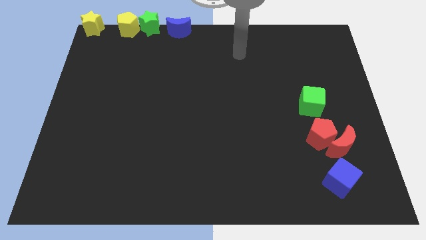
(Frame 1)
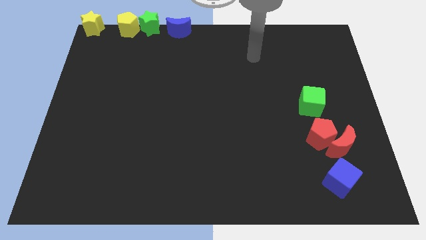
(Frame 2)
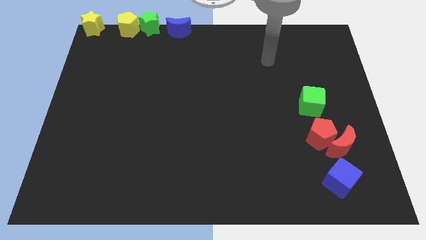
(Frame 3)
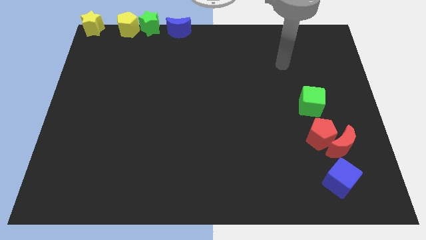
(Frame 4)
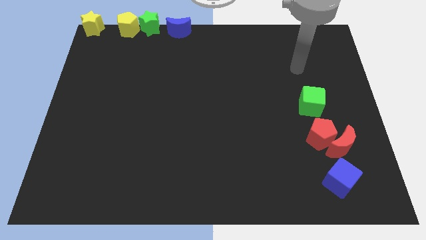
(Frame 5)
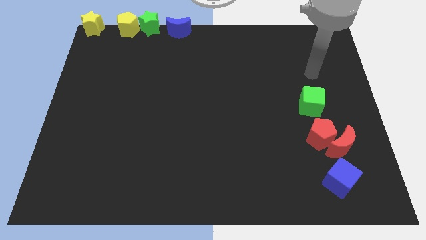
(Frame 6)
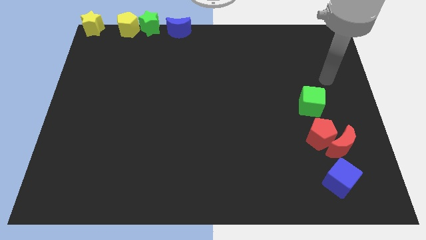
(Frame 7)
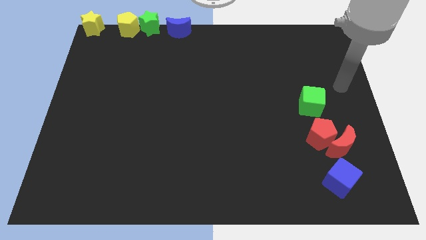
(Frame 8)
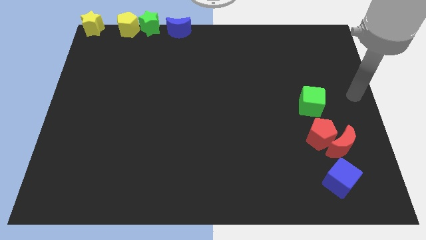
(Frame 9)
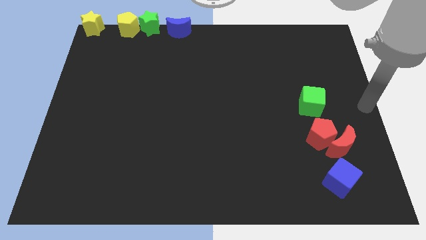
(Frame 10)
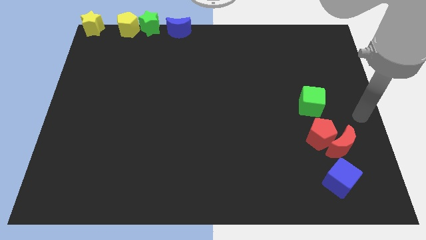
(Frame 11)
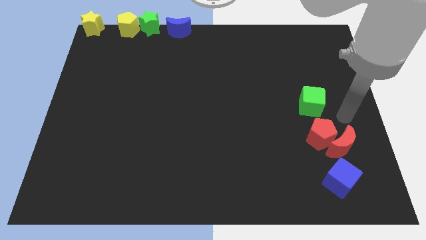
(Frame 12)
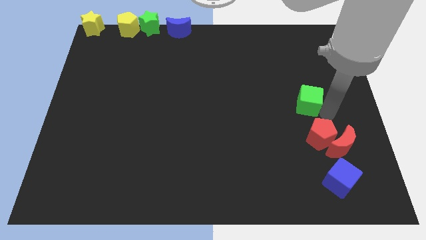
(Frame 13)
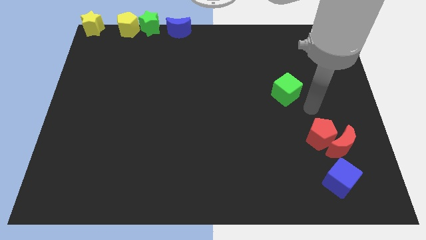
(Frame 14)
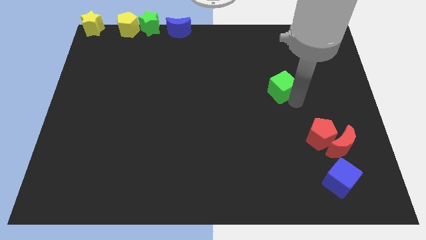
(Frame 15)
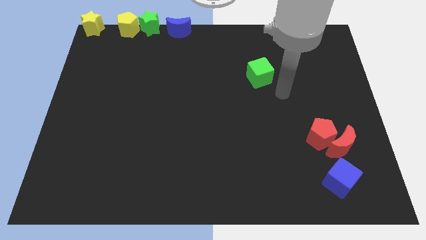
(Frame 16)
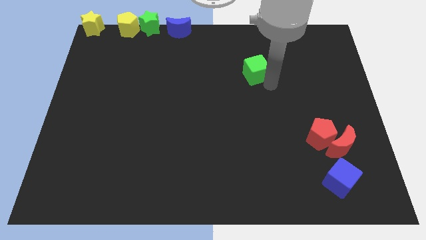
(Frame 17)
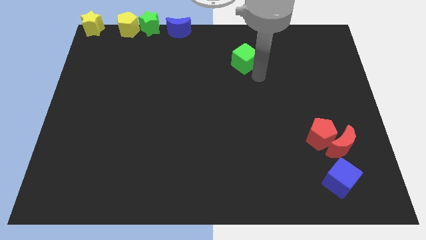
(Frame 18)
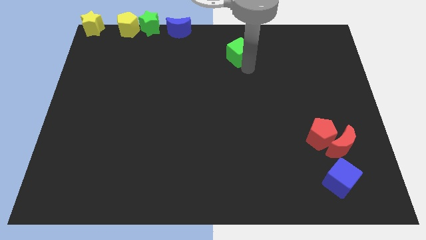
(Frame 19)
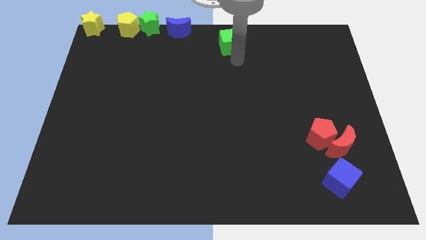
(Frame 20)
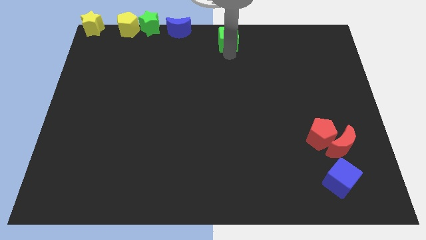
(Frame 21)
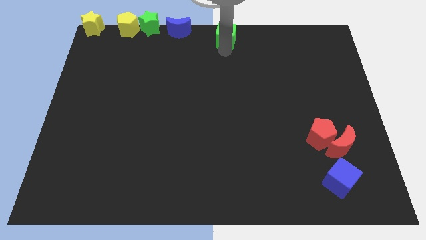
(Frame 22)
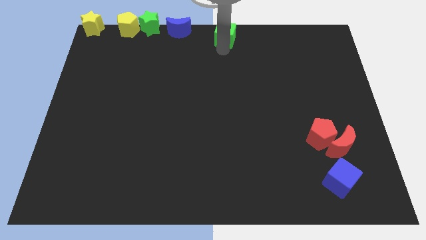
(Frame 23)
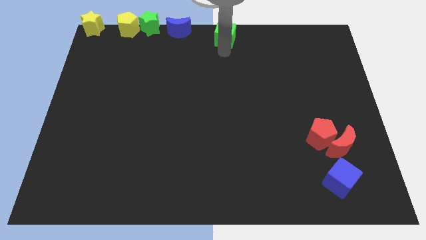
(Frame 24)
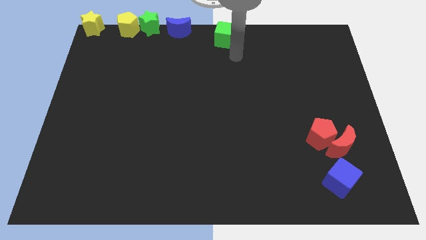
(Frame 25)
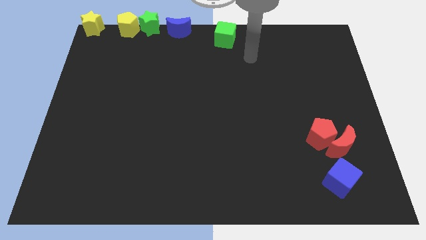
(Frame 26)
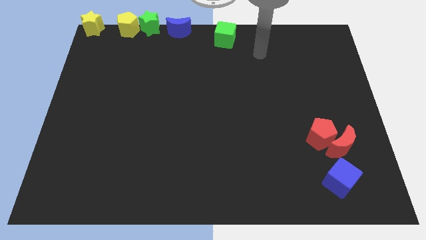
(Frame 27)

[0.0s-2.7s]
move the green cube to the top center of the board

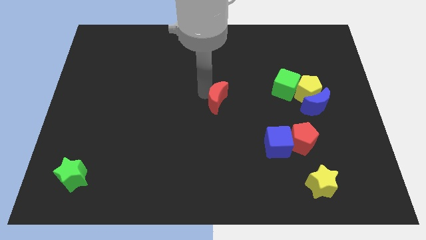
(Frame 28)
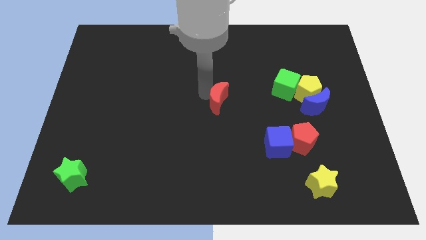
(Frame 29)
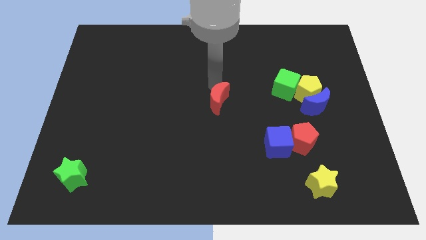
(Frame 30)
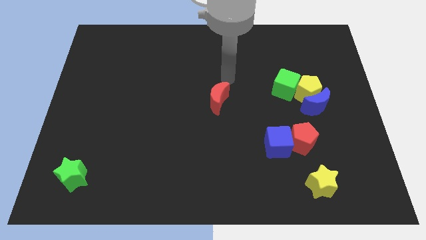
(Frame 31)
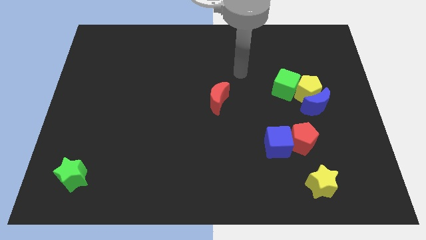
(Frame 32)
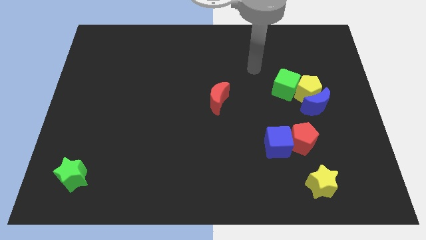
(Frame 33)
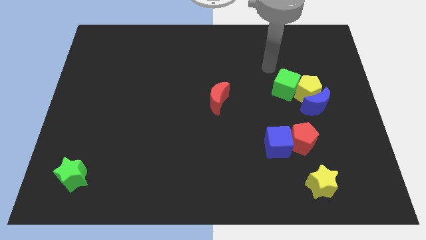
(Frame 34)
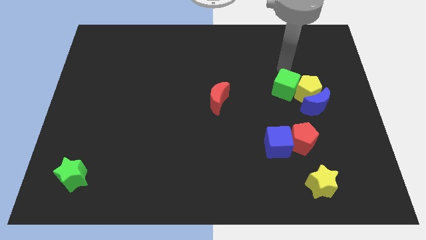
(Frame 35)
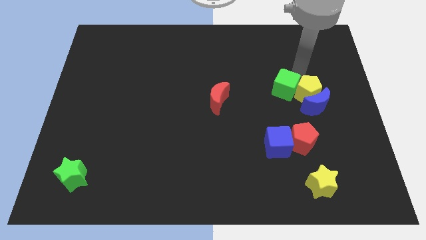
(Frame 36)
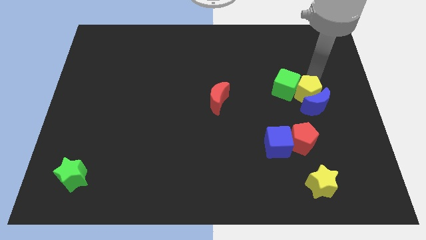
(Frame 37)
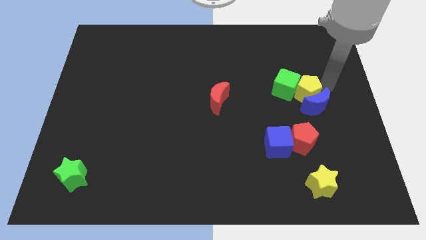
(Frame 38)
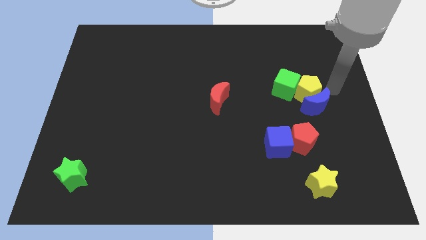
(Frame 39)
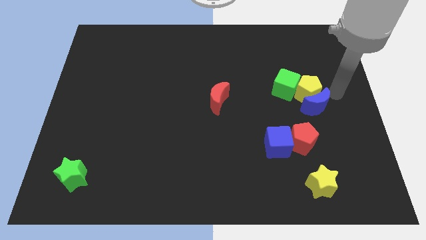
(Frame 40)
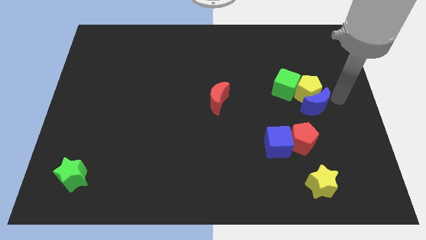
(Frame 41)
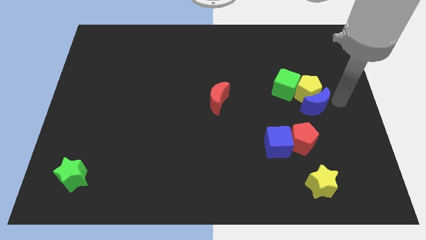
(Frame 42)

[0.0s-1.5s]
move your arm towards the blue crescent

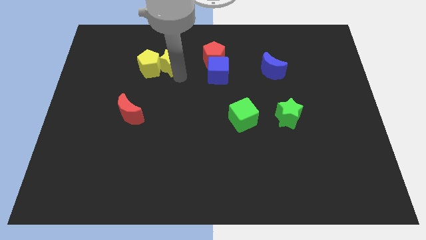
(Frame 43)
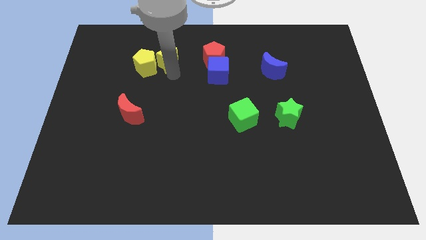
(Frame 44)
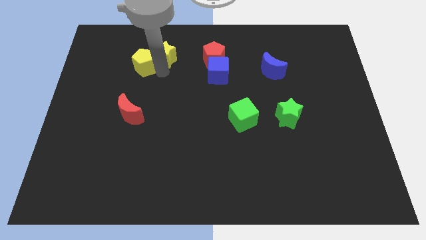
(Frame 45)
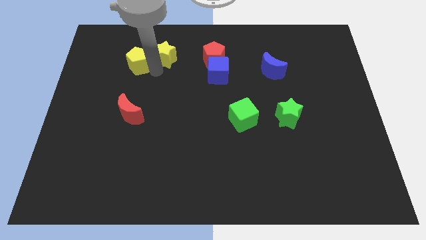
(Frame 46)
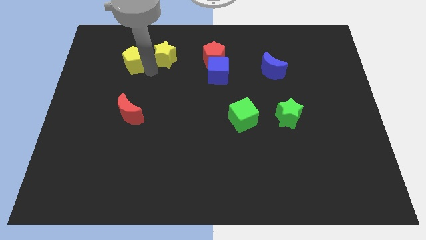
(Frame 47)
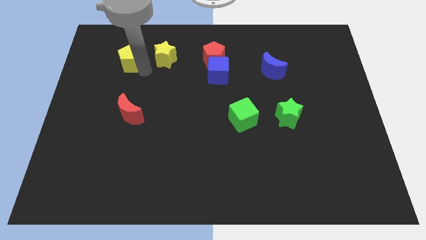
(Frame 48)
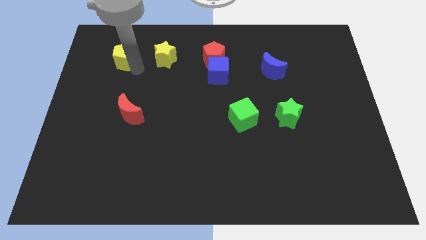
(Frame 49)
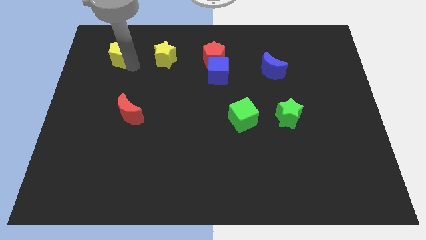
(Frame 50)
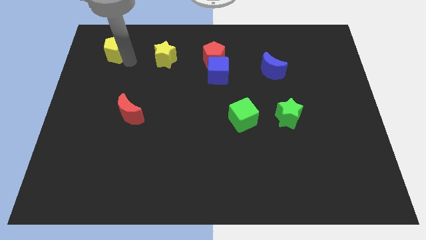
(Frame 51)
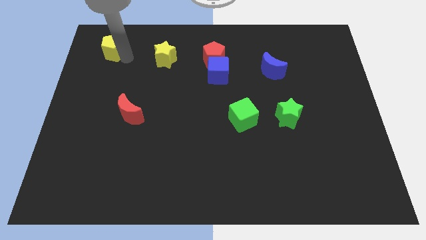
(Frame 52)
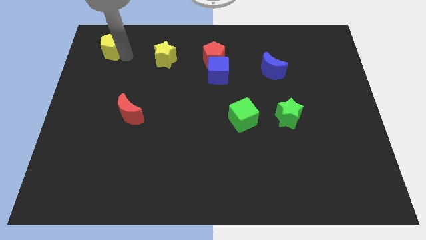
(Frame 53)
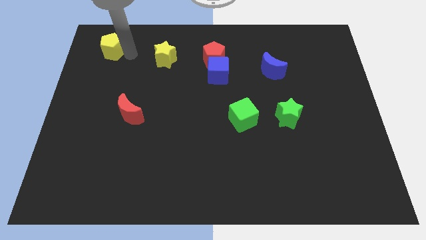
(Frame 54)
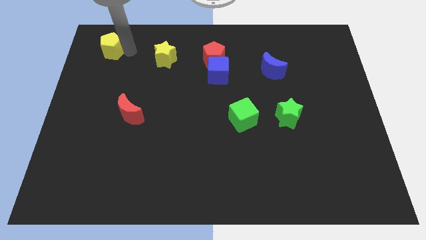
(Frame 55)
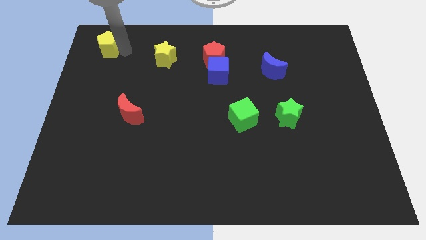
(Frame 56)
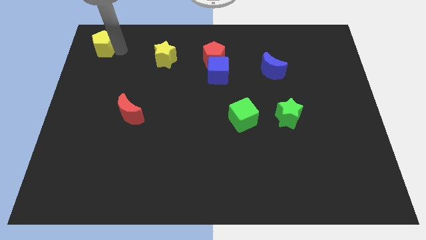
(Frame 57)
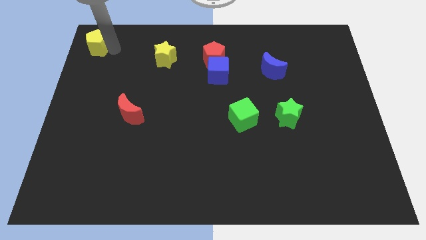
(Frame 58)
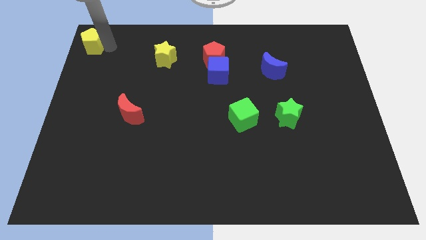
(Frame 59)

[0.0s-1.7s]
separate the yellow pentagon from the yellow star

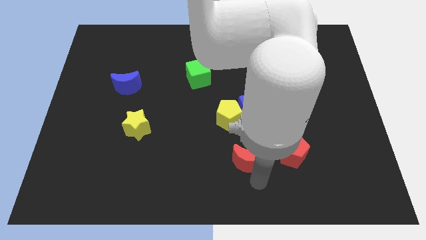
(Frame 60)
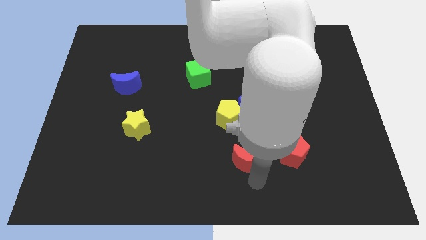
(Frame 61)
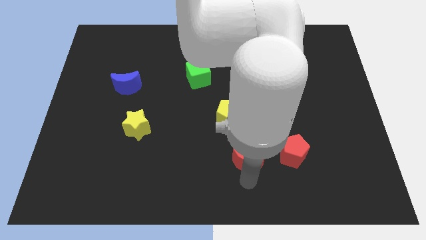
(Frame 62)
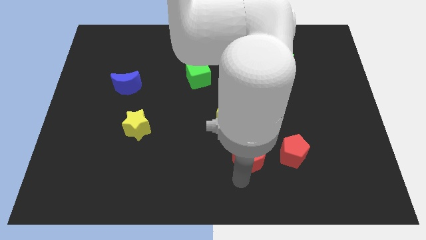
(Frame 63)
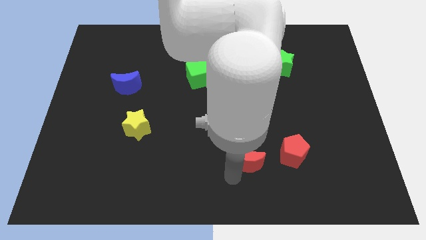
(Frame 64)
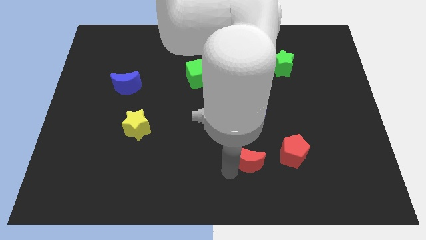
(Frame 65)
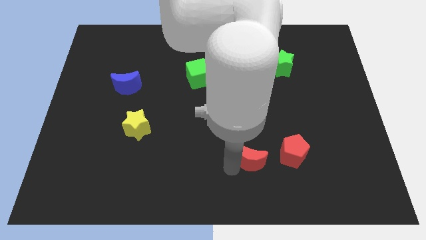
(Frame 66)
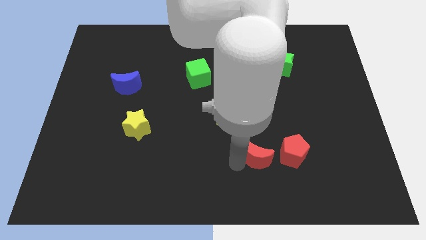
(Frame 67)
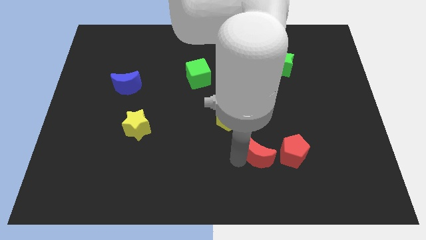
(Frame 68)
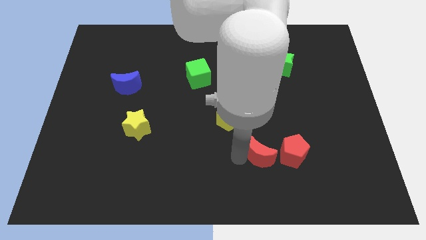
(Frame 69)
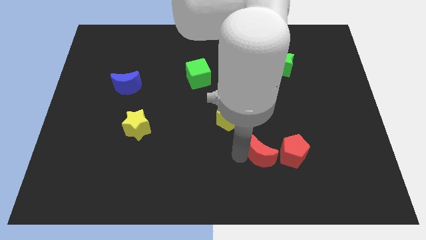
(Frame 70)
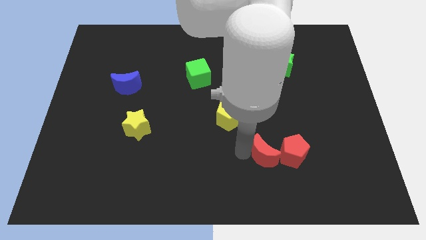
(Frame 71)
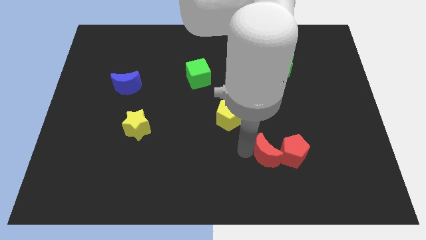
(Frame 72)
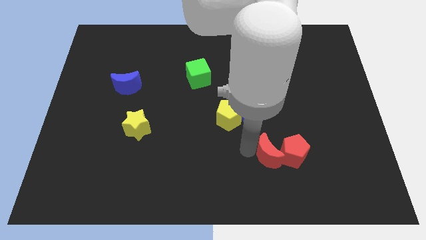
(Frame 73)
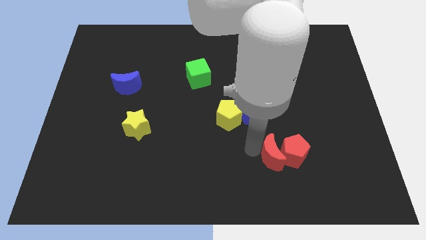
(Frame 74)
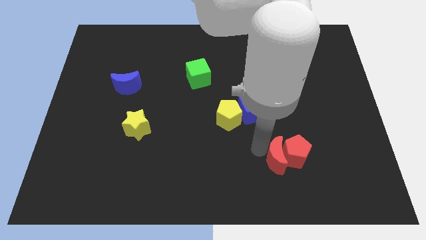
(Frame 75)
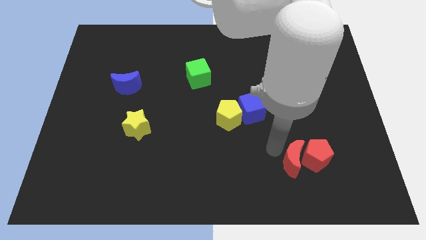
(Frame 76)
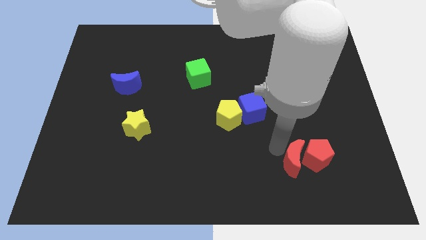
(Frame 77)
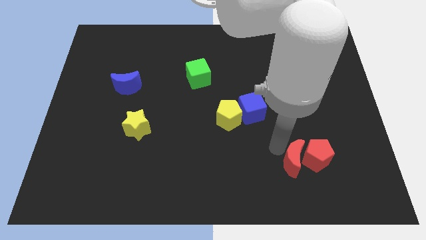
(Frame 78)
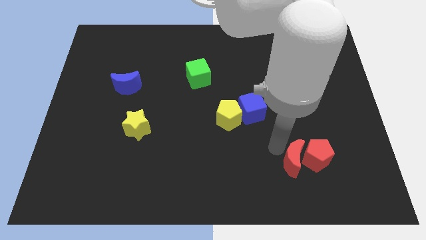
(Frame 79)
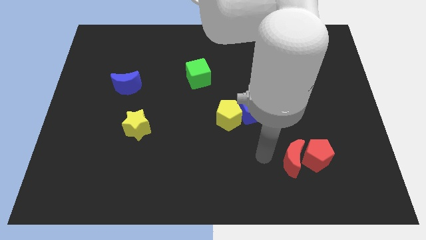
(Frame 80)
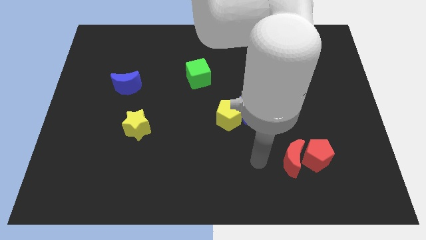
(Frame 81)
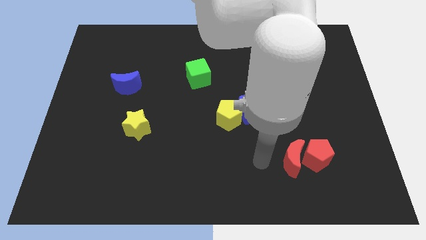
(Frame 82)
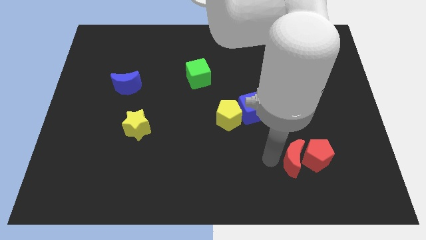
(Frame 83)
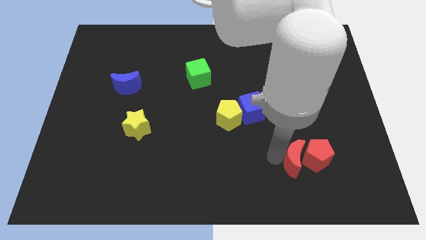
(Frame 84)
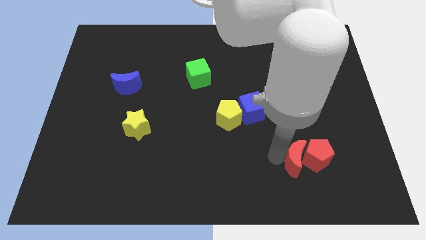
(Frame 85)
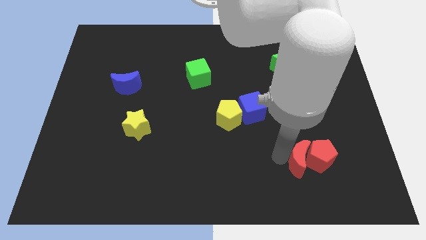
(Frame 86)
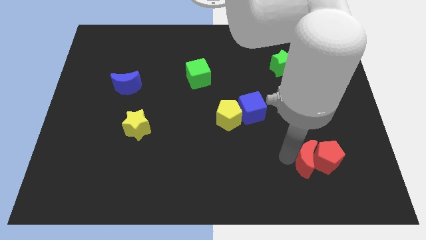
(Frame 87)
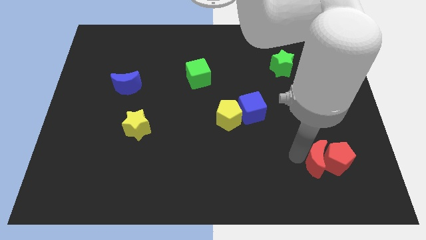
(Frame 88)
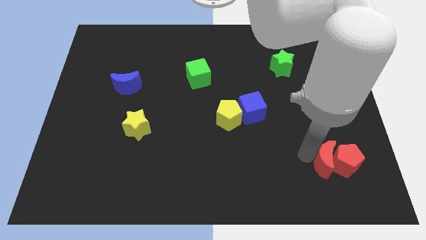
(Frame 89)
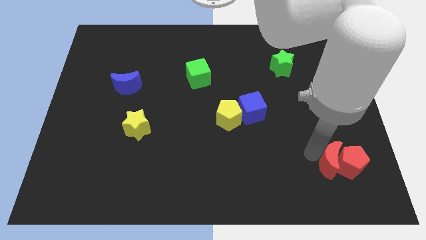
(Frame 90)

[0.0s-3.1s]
move the red blocks slightly to the right
